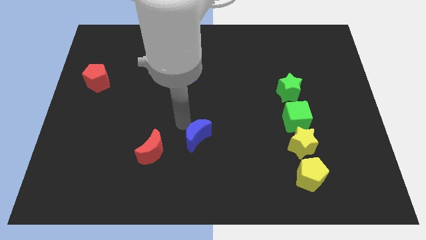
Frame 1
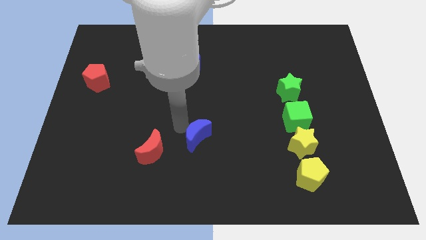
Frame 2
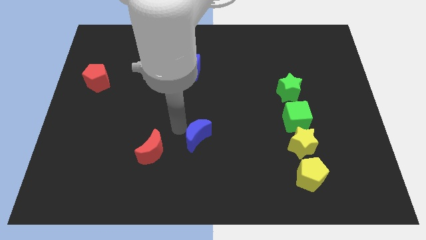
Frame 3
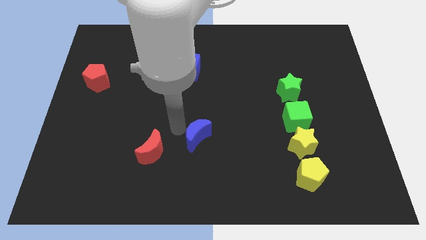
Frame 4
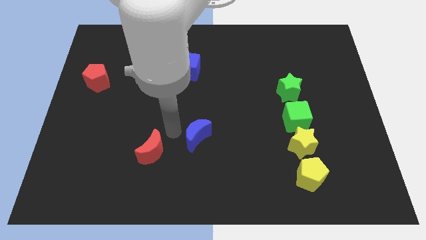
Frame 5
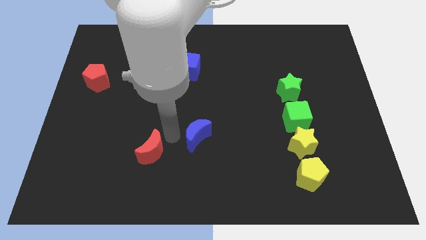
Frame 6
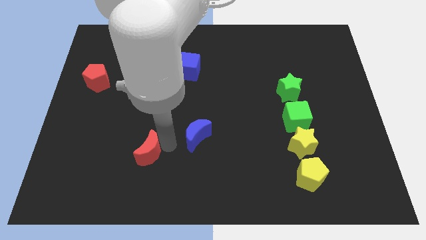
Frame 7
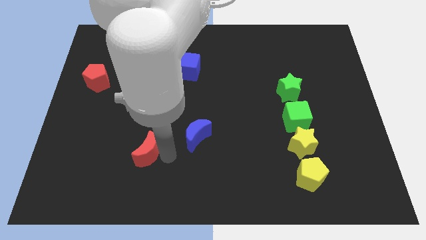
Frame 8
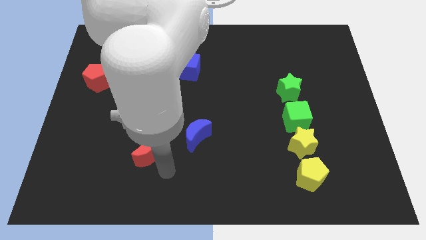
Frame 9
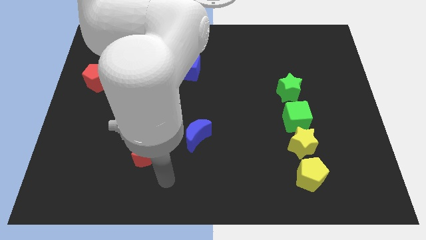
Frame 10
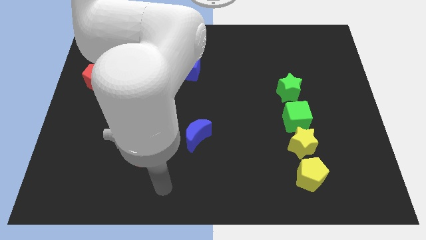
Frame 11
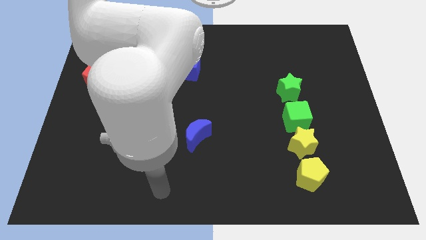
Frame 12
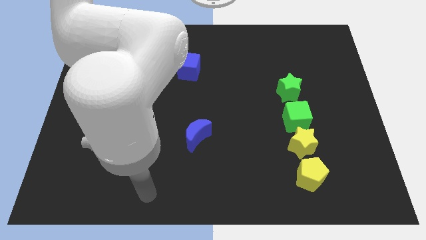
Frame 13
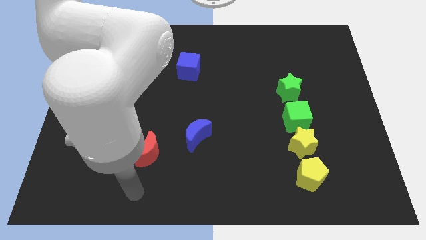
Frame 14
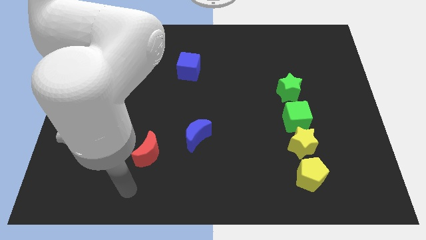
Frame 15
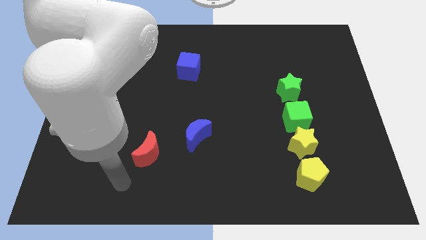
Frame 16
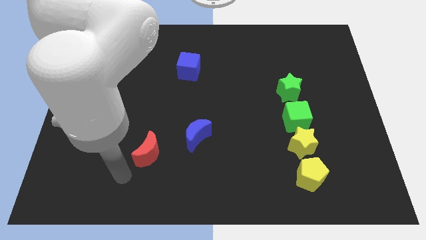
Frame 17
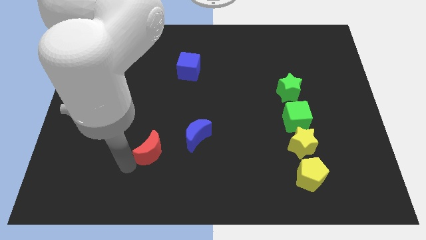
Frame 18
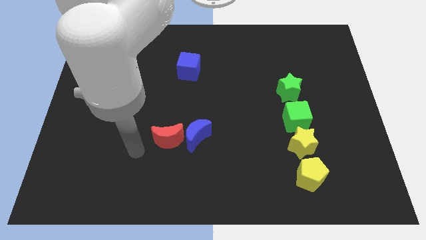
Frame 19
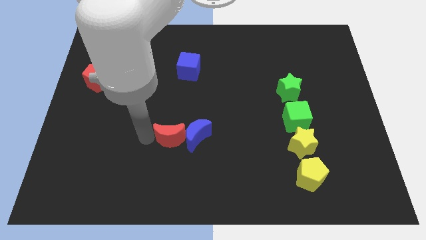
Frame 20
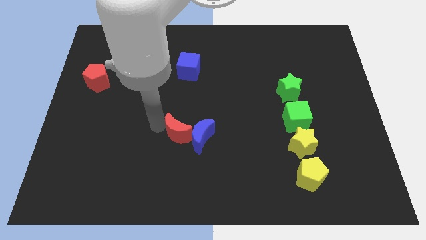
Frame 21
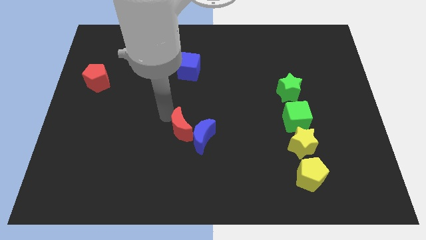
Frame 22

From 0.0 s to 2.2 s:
move the red moon to the left of the blue moon

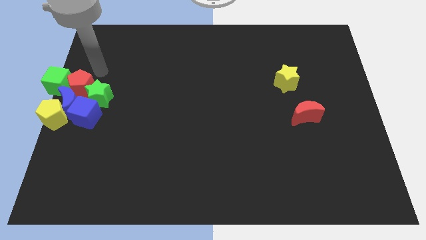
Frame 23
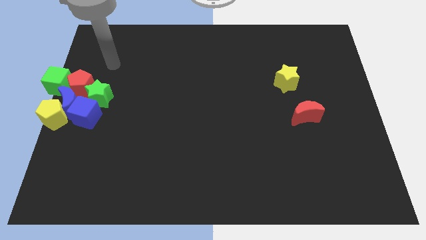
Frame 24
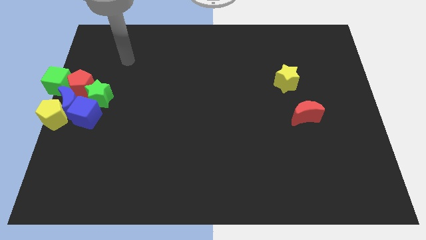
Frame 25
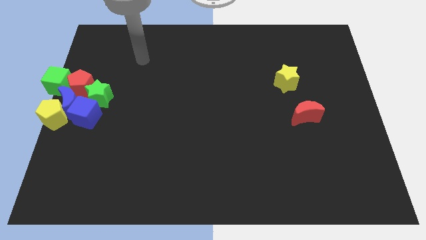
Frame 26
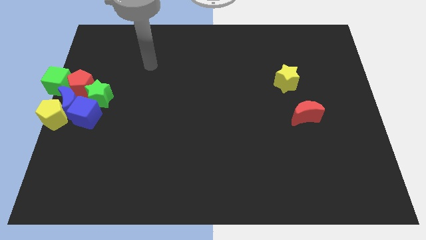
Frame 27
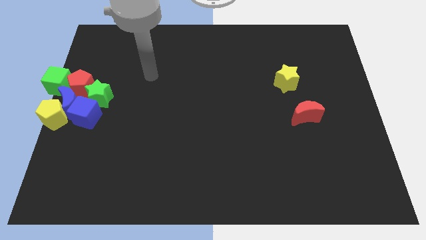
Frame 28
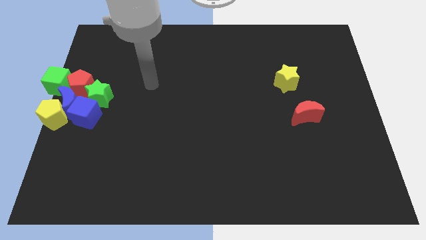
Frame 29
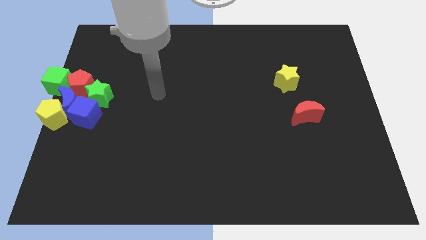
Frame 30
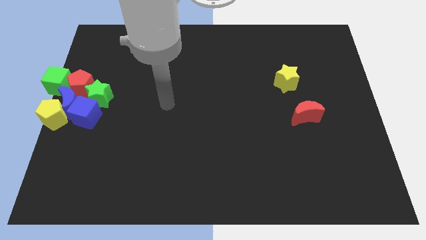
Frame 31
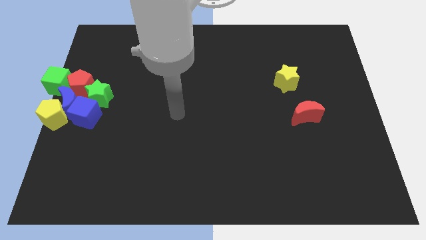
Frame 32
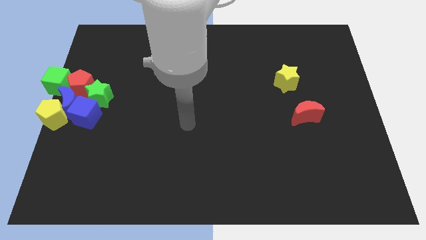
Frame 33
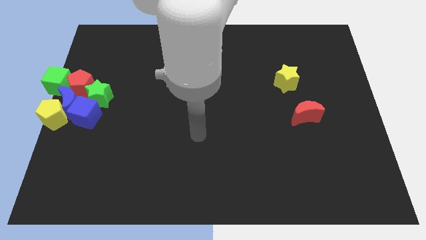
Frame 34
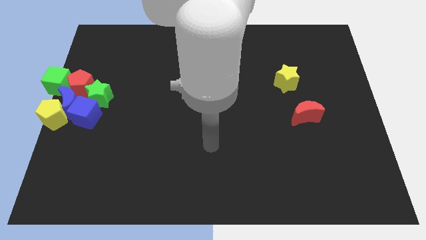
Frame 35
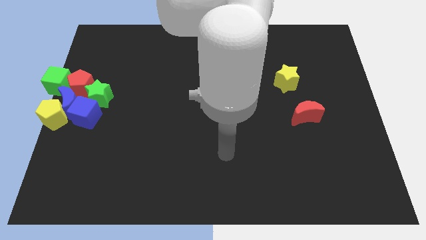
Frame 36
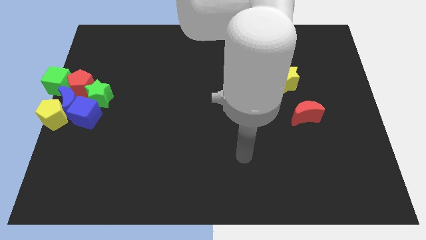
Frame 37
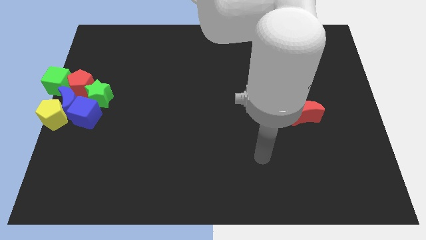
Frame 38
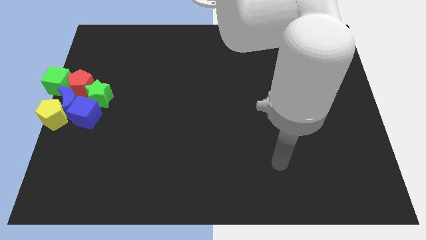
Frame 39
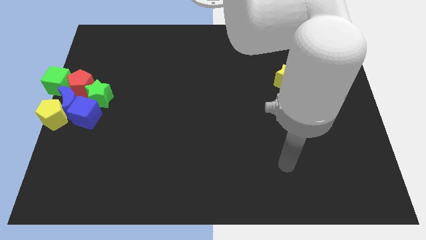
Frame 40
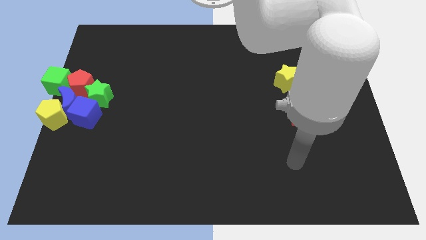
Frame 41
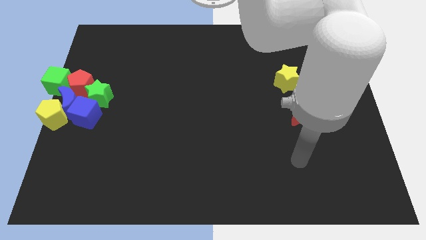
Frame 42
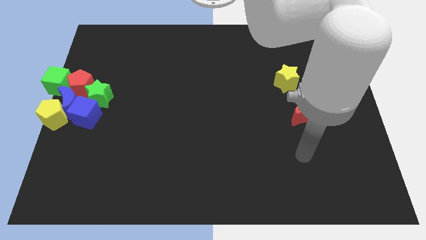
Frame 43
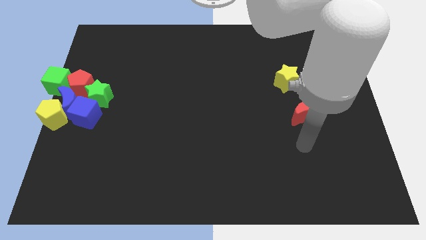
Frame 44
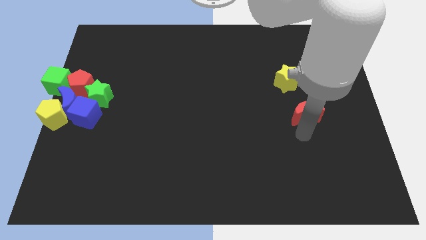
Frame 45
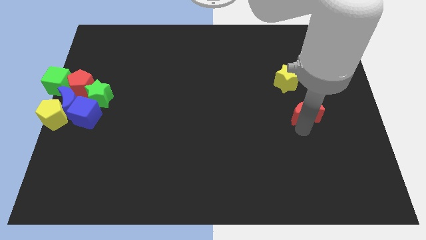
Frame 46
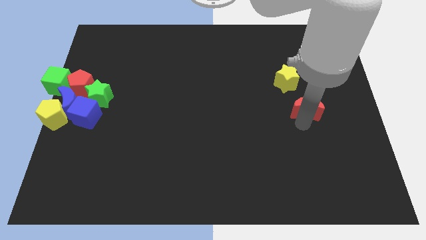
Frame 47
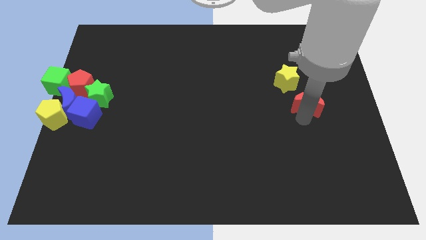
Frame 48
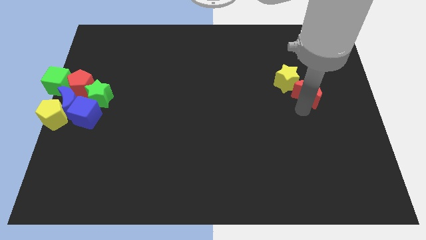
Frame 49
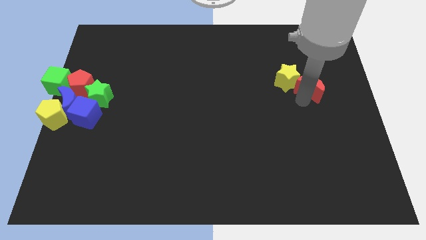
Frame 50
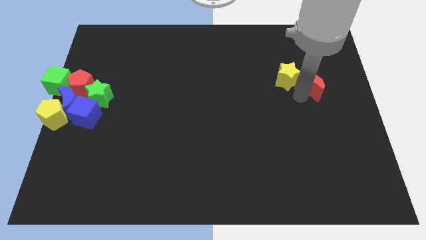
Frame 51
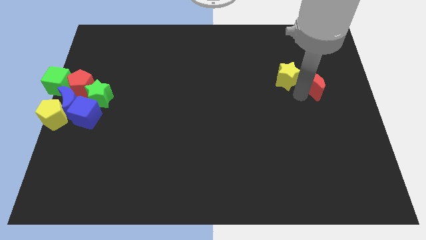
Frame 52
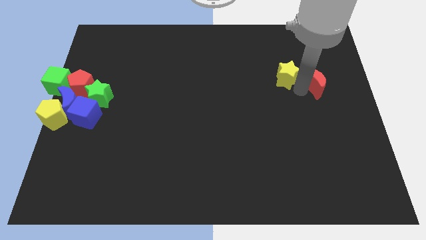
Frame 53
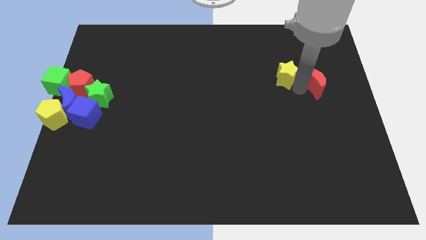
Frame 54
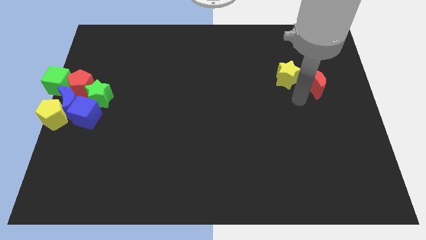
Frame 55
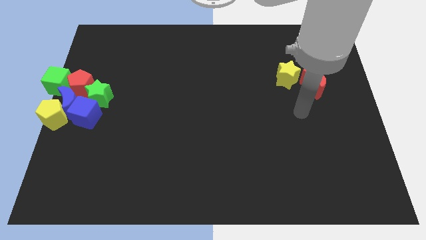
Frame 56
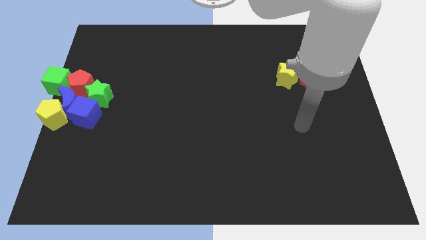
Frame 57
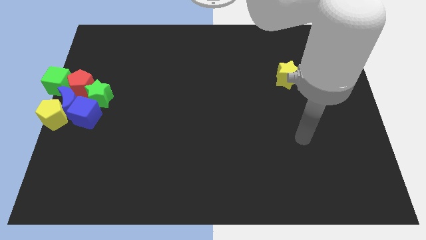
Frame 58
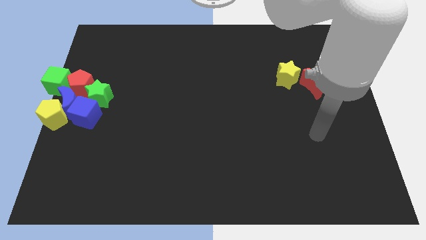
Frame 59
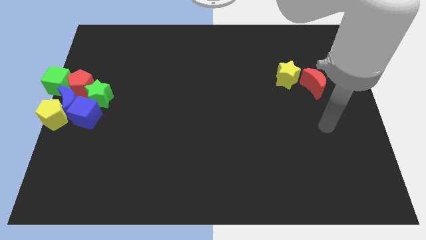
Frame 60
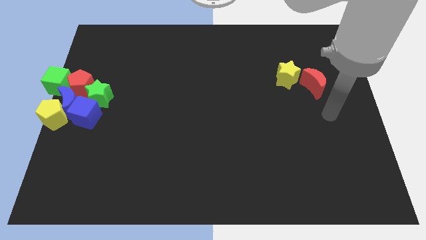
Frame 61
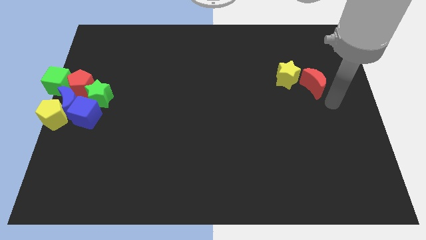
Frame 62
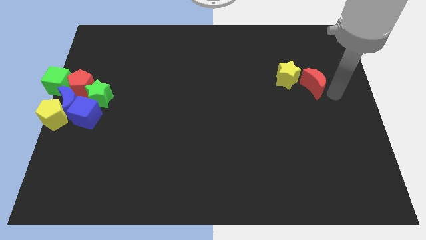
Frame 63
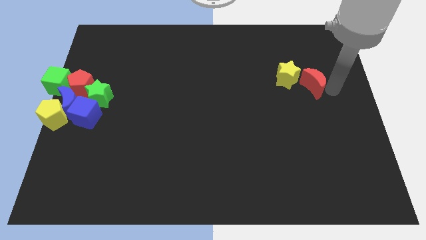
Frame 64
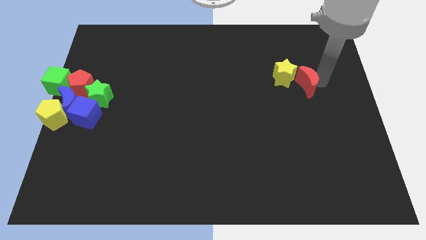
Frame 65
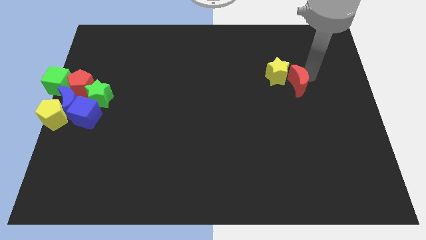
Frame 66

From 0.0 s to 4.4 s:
push the red moon right to the yellow star

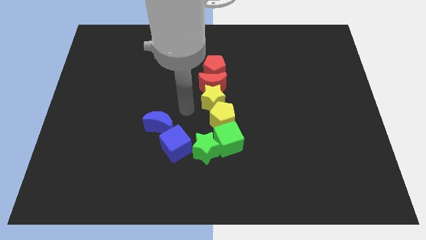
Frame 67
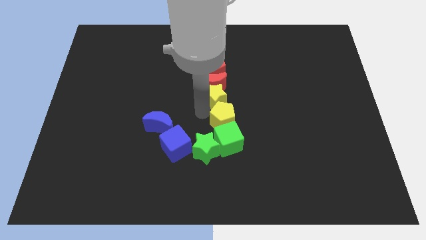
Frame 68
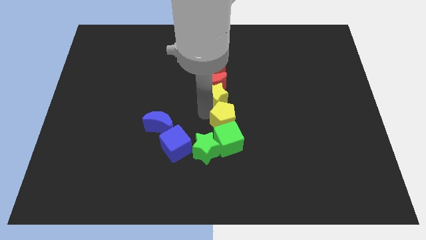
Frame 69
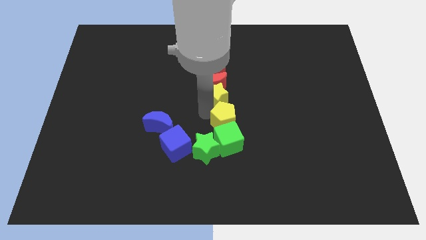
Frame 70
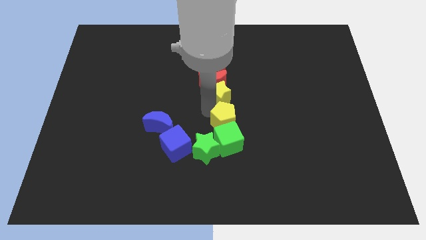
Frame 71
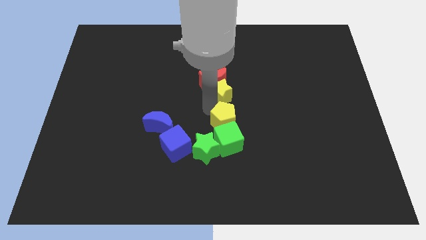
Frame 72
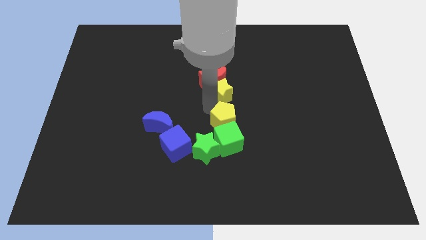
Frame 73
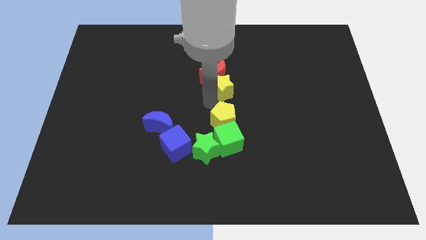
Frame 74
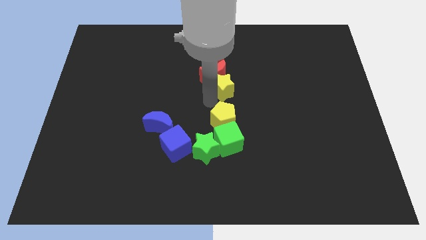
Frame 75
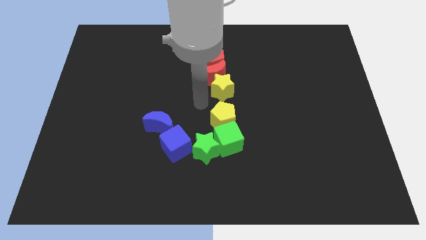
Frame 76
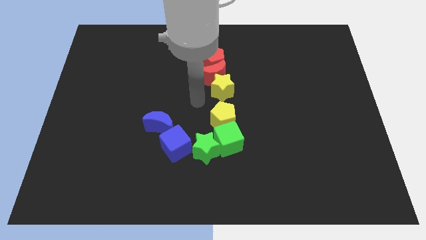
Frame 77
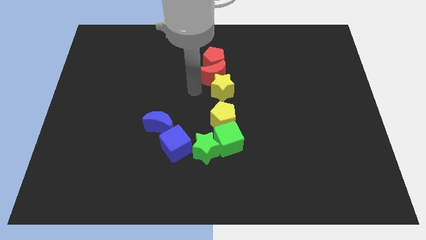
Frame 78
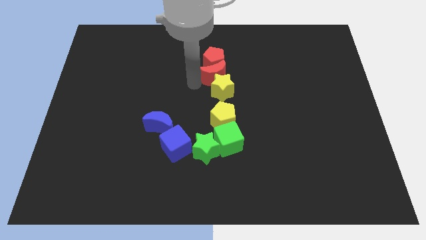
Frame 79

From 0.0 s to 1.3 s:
separate yellow blocks

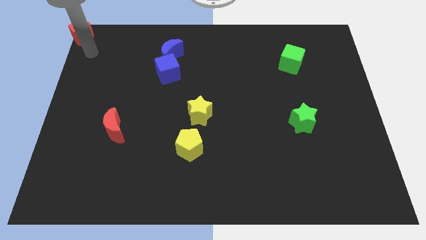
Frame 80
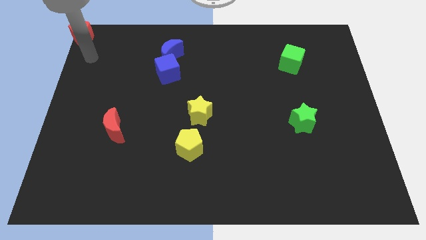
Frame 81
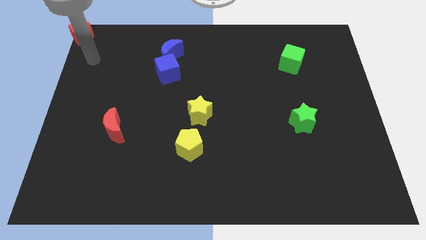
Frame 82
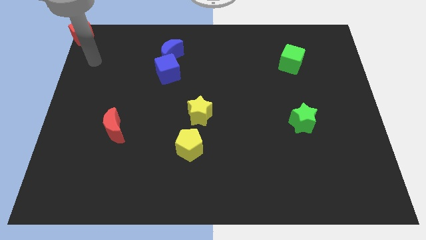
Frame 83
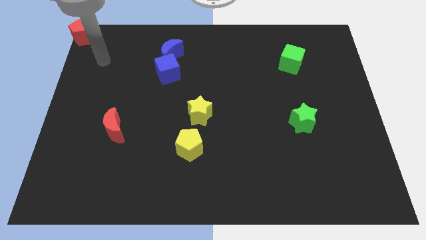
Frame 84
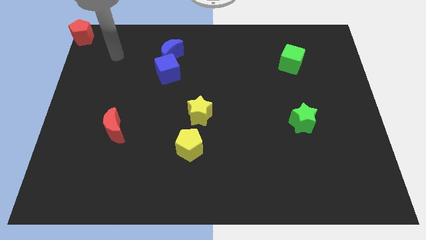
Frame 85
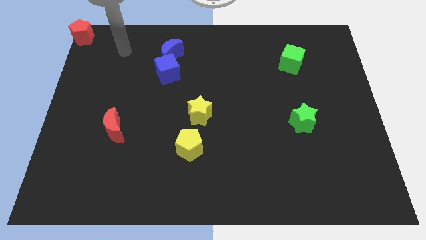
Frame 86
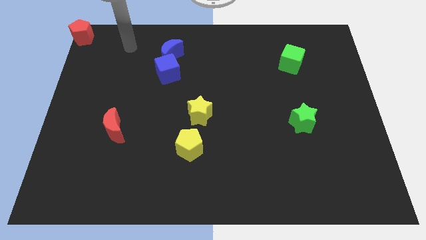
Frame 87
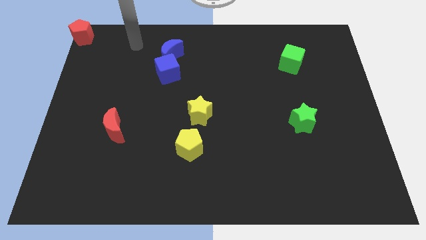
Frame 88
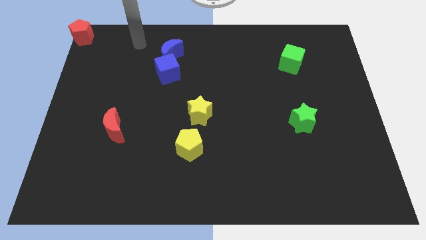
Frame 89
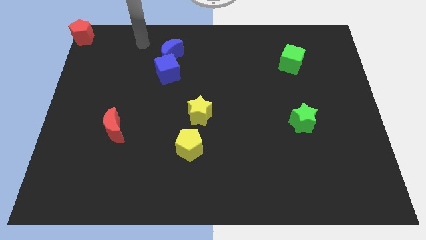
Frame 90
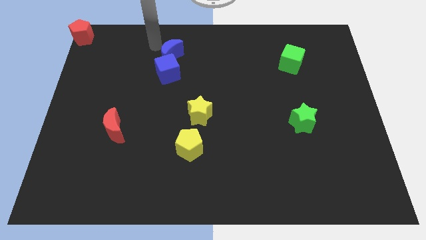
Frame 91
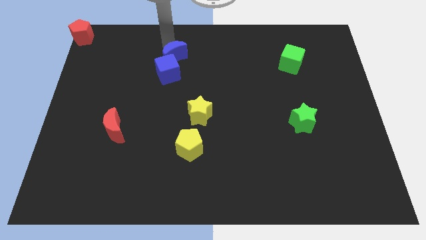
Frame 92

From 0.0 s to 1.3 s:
move the arm to the top of the blue moon
